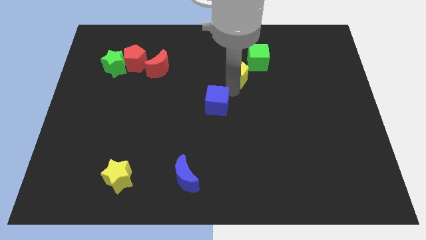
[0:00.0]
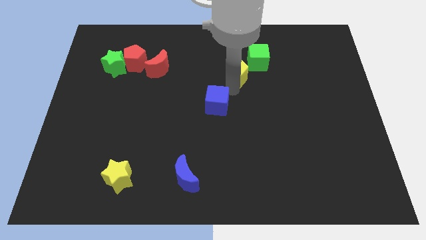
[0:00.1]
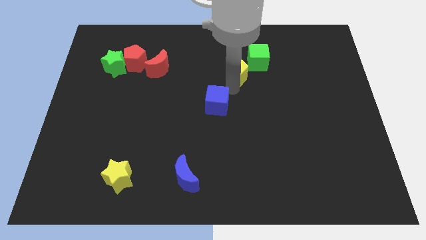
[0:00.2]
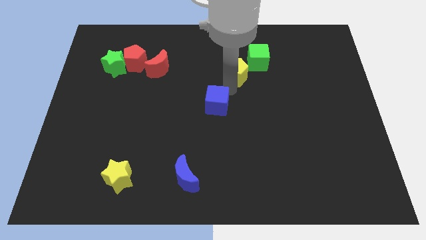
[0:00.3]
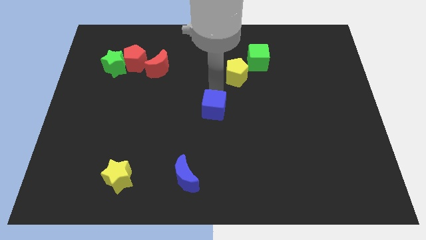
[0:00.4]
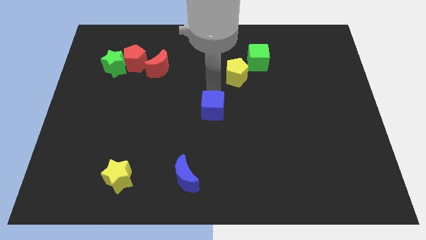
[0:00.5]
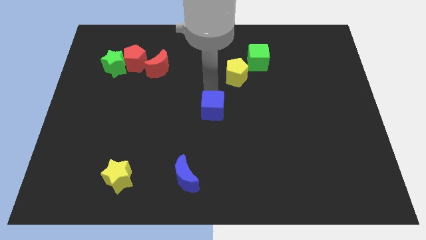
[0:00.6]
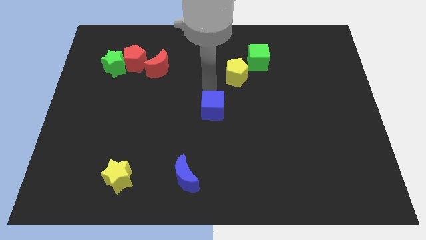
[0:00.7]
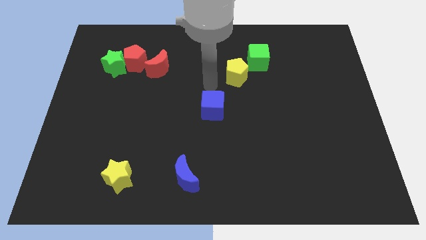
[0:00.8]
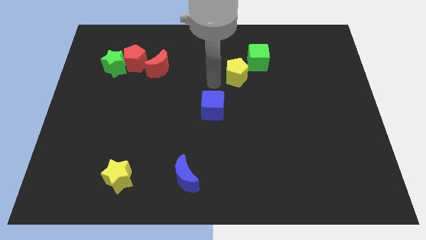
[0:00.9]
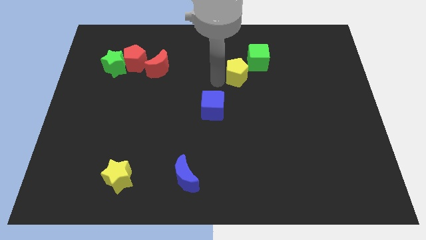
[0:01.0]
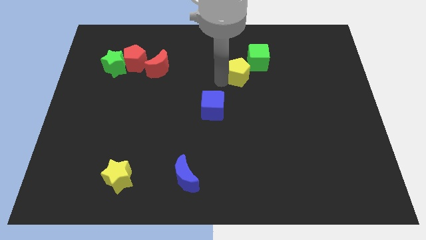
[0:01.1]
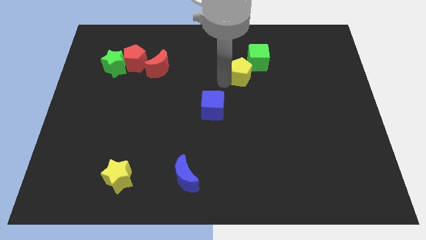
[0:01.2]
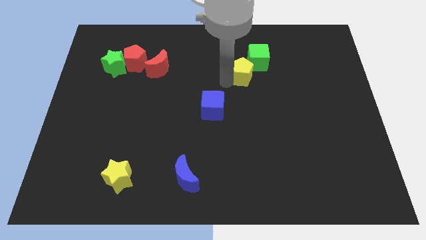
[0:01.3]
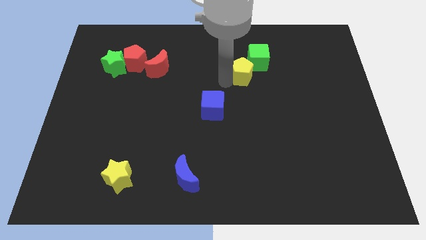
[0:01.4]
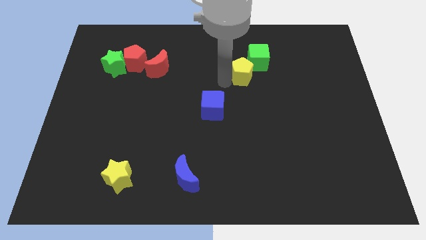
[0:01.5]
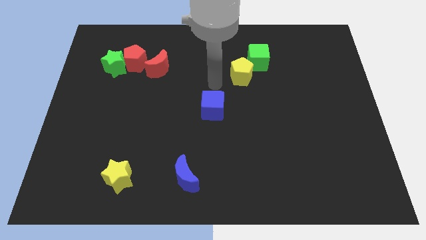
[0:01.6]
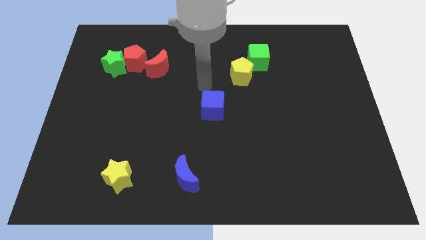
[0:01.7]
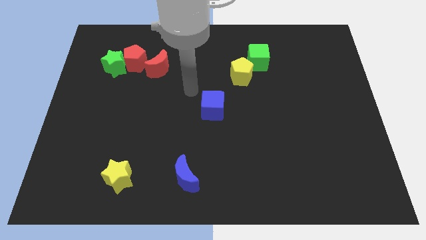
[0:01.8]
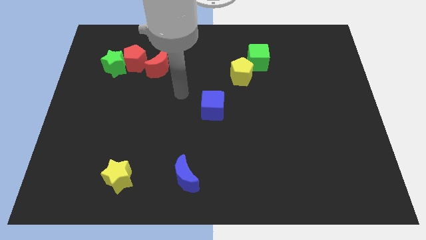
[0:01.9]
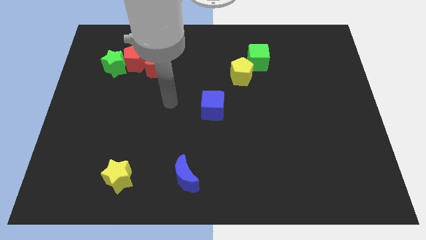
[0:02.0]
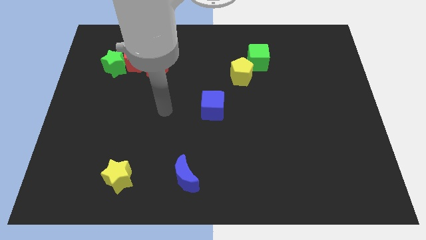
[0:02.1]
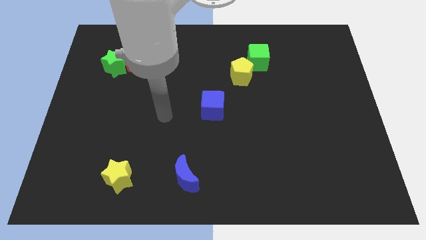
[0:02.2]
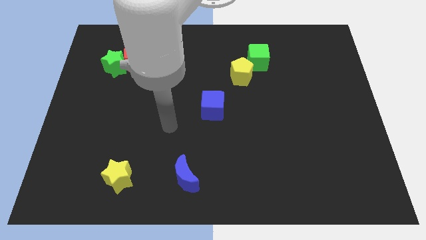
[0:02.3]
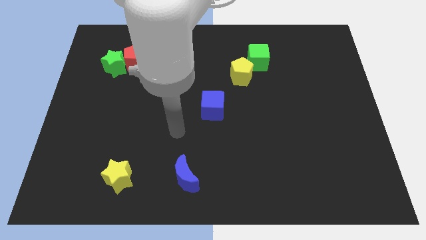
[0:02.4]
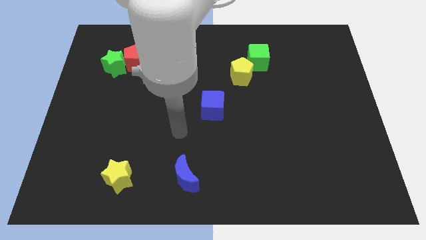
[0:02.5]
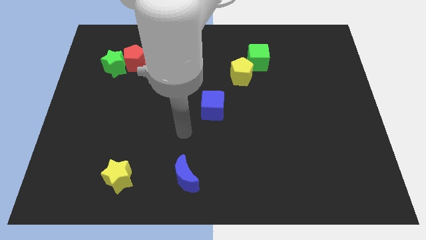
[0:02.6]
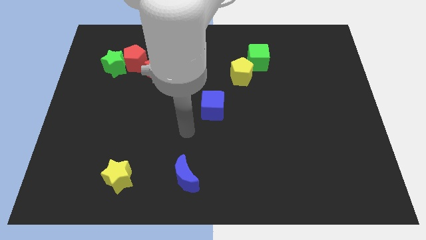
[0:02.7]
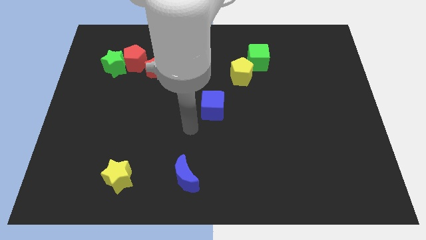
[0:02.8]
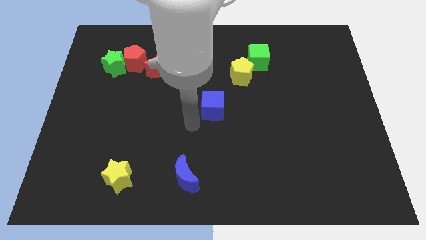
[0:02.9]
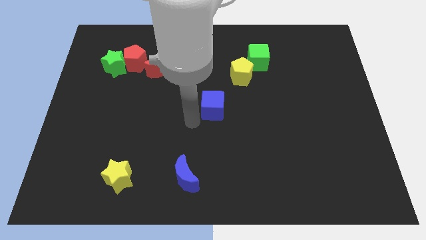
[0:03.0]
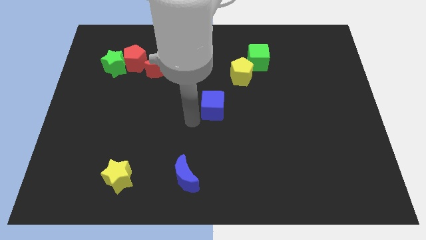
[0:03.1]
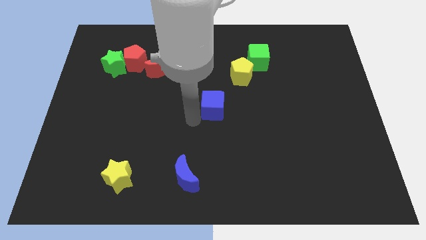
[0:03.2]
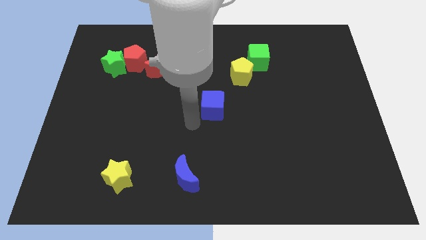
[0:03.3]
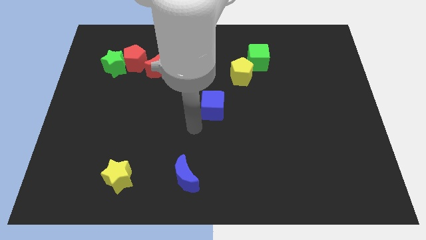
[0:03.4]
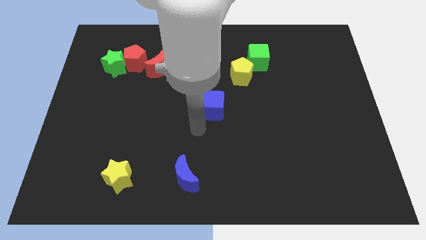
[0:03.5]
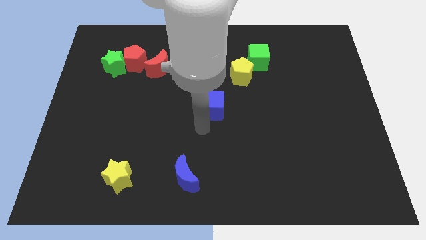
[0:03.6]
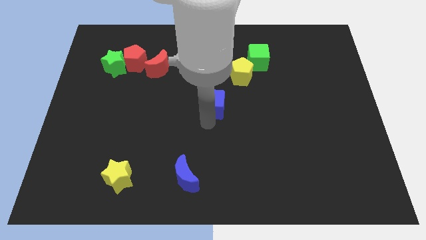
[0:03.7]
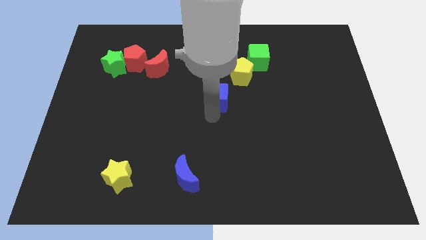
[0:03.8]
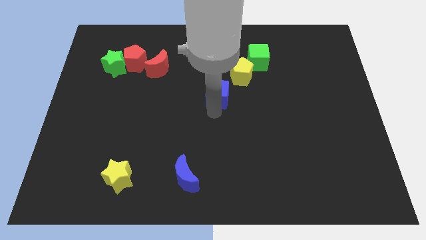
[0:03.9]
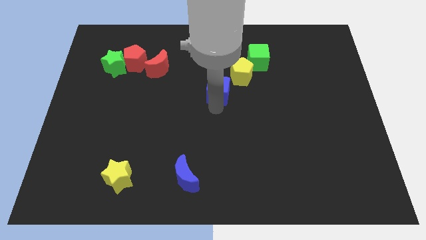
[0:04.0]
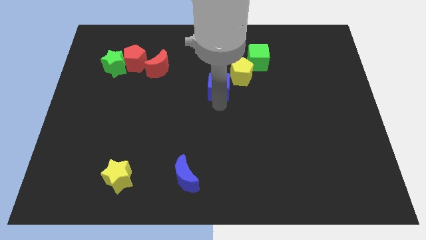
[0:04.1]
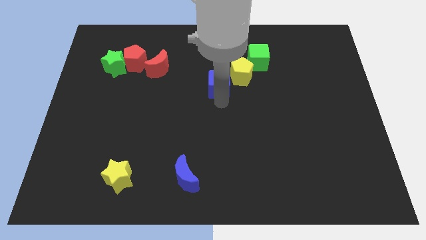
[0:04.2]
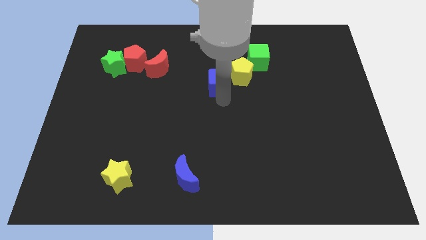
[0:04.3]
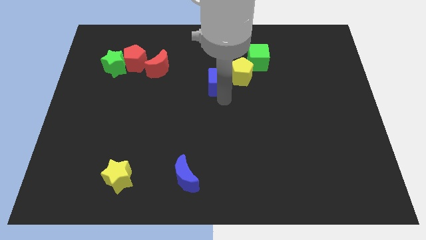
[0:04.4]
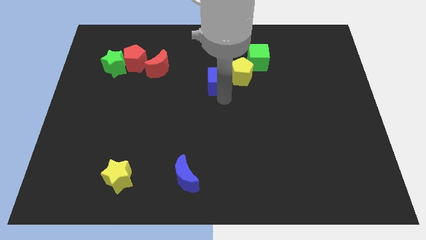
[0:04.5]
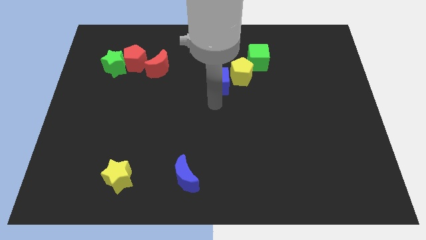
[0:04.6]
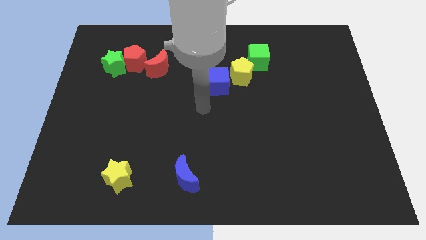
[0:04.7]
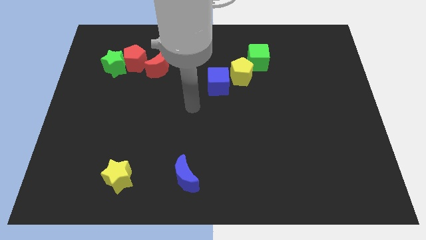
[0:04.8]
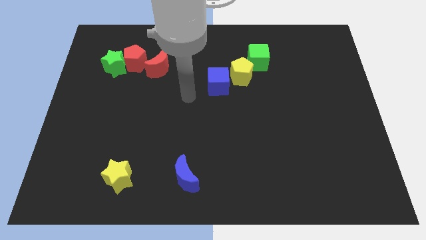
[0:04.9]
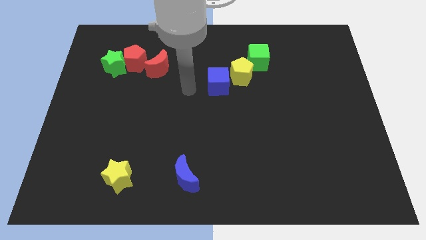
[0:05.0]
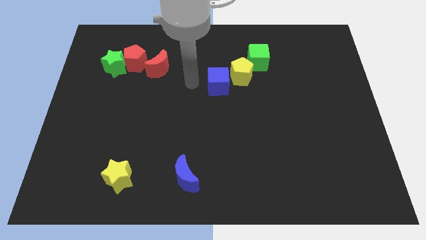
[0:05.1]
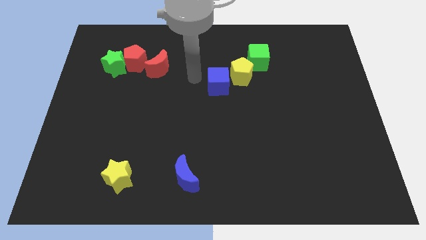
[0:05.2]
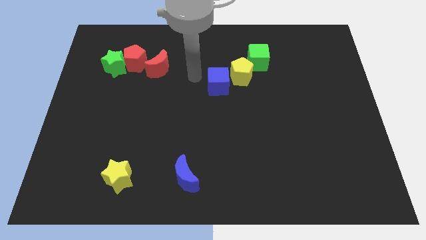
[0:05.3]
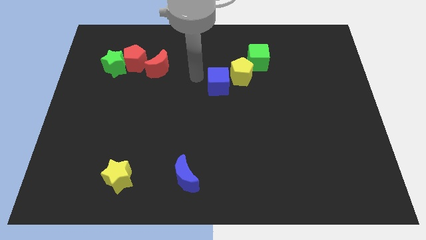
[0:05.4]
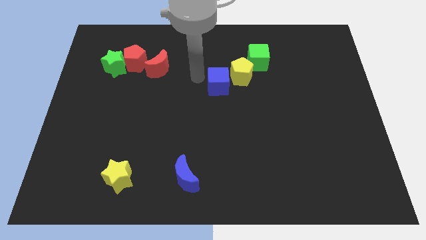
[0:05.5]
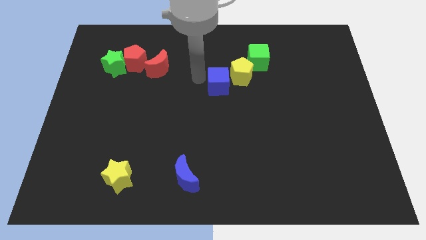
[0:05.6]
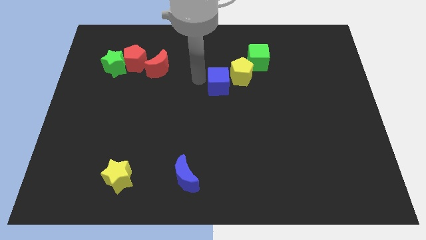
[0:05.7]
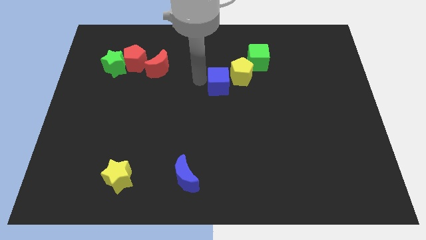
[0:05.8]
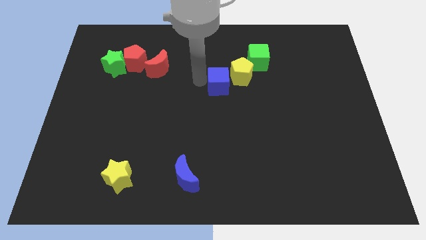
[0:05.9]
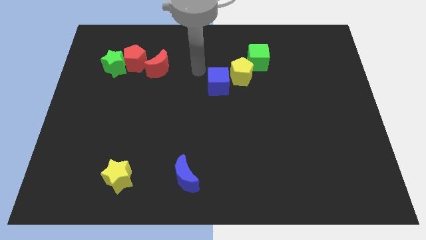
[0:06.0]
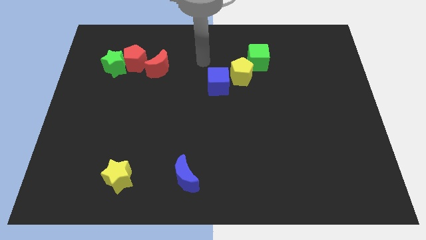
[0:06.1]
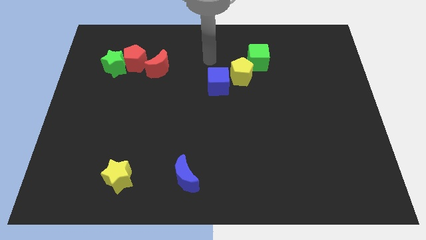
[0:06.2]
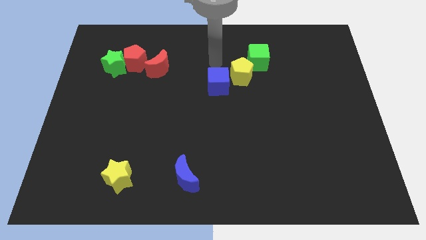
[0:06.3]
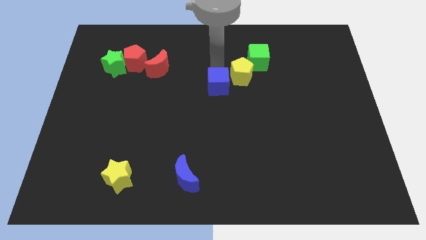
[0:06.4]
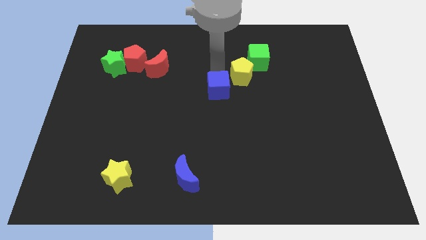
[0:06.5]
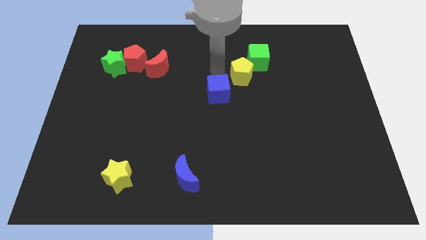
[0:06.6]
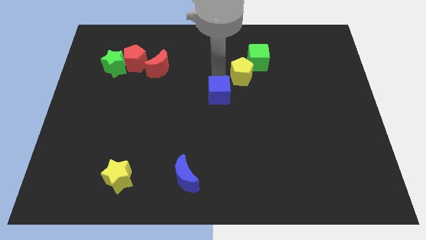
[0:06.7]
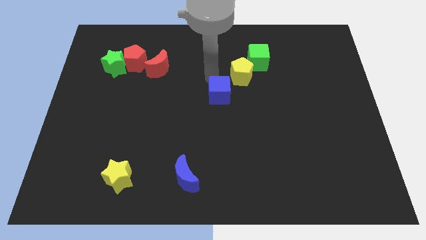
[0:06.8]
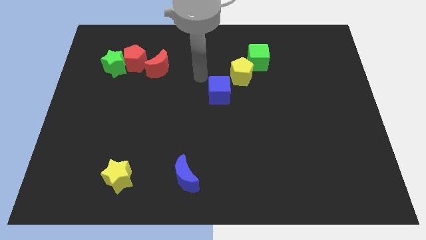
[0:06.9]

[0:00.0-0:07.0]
move the yellow pentagon and the blue cube to the bottom left of the green cube

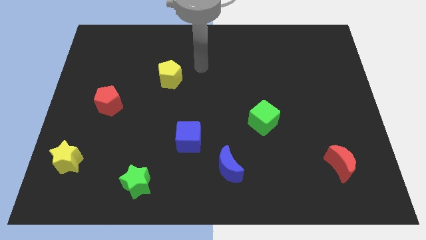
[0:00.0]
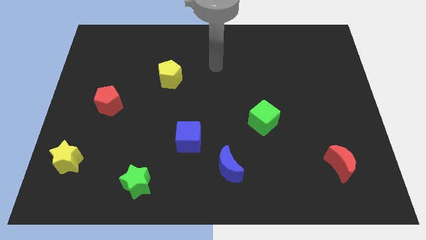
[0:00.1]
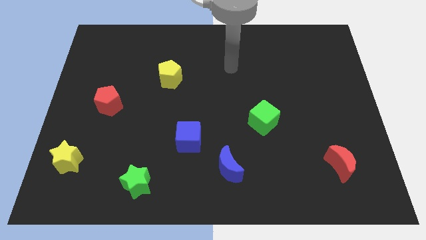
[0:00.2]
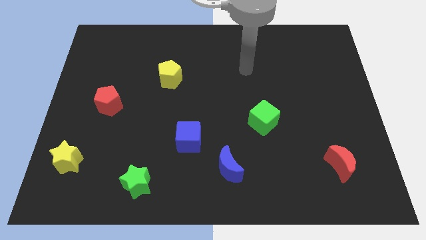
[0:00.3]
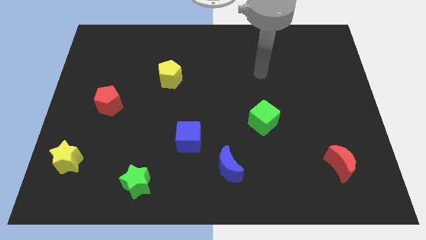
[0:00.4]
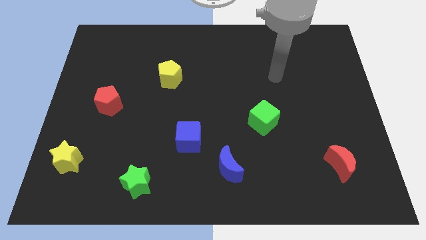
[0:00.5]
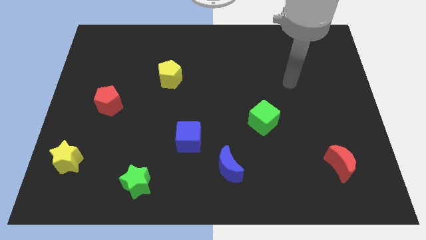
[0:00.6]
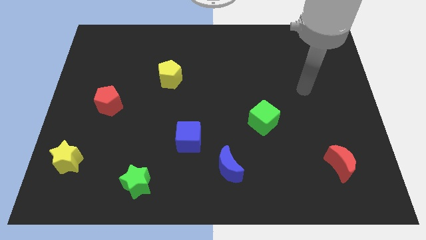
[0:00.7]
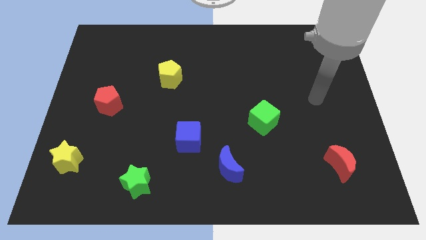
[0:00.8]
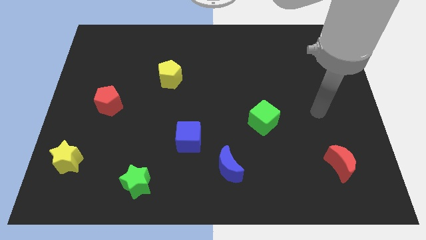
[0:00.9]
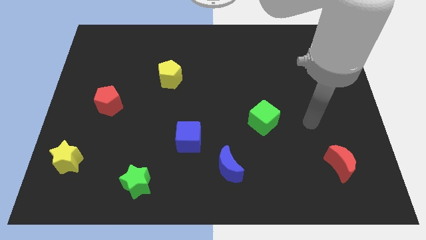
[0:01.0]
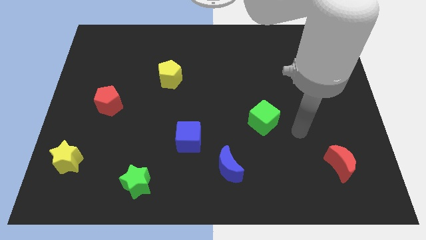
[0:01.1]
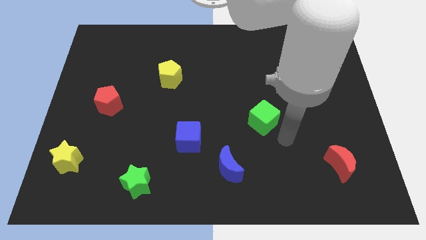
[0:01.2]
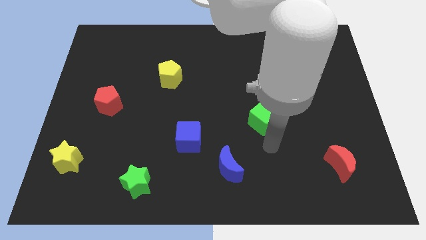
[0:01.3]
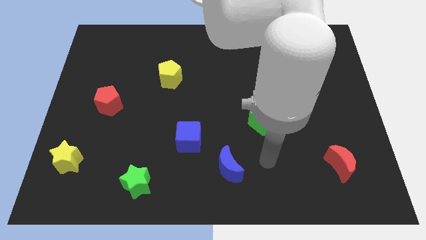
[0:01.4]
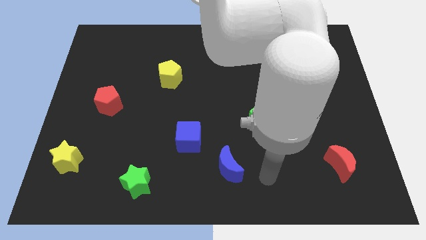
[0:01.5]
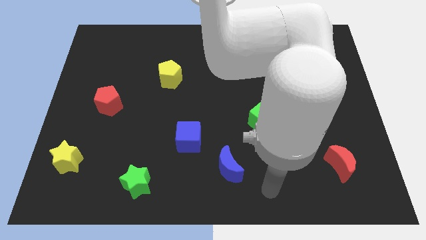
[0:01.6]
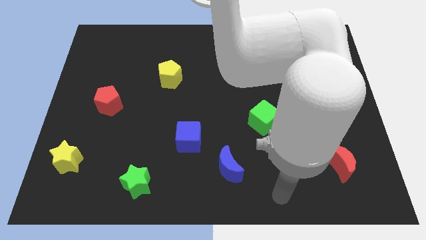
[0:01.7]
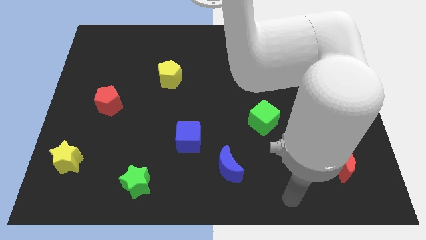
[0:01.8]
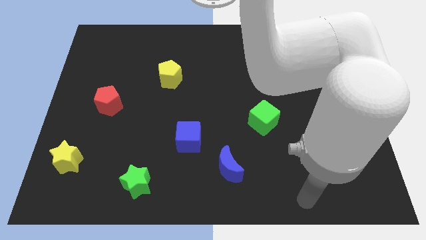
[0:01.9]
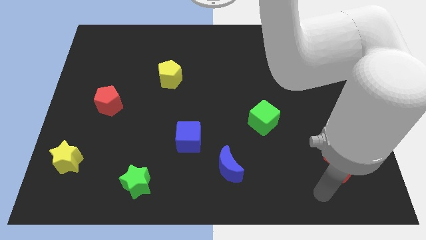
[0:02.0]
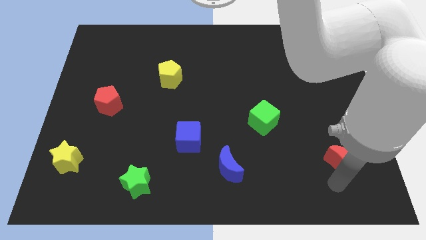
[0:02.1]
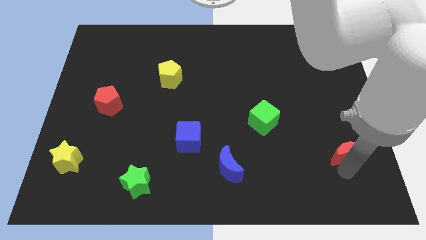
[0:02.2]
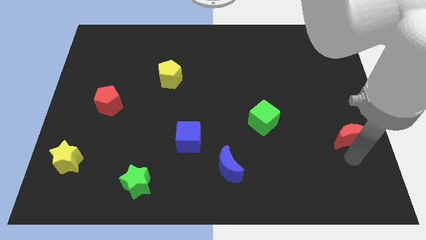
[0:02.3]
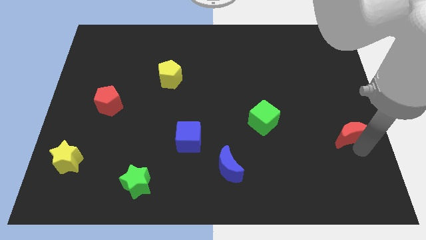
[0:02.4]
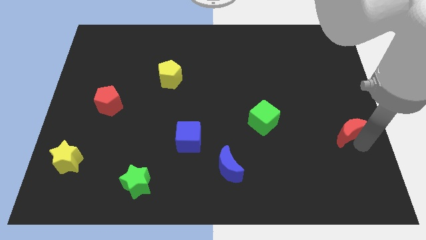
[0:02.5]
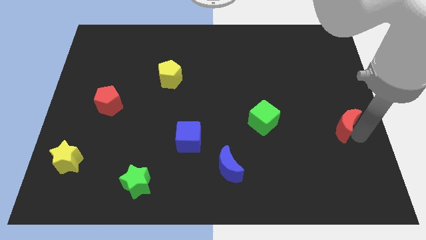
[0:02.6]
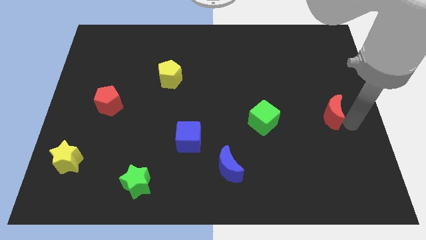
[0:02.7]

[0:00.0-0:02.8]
move the red moon to the right side of the green cube
